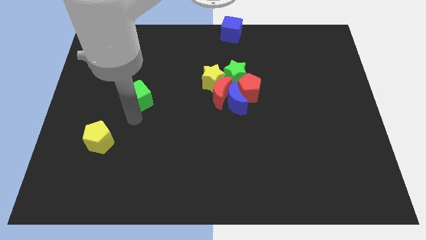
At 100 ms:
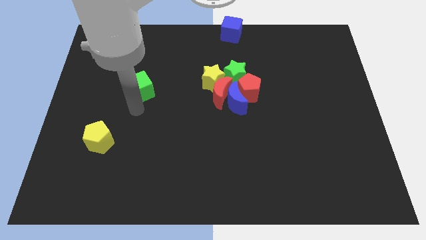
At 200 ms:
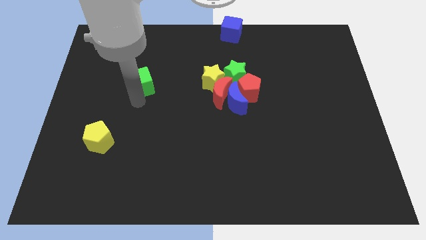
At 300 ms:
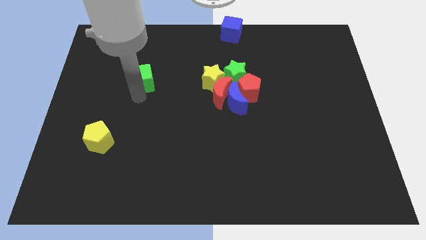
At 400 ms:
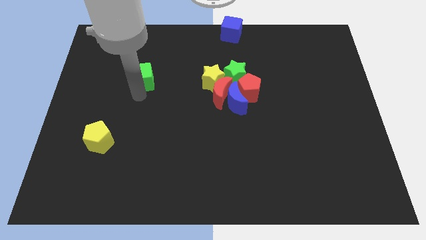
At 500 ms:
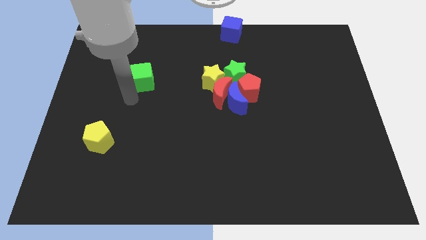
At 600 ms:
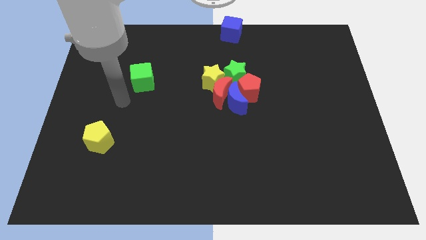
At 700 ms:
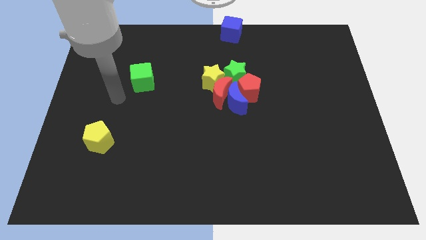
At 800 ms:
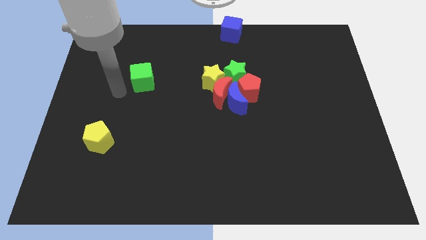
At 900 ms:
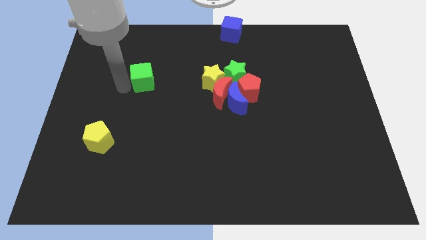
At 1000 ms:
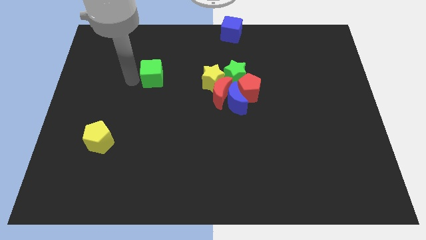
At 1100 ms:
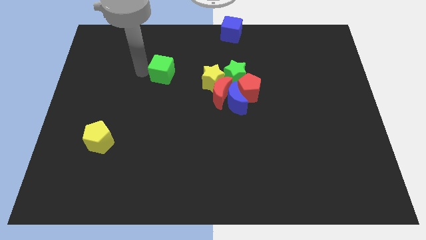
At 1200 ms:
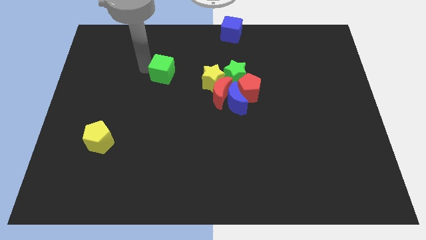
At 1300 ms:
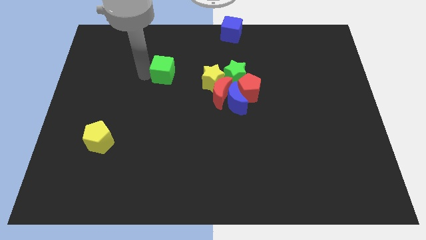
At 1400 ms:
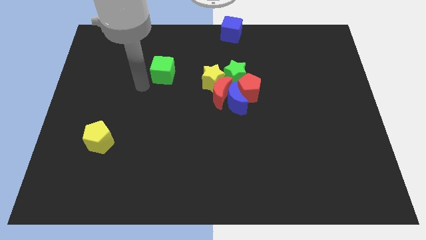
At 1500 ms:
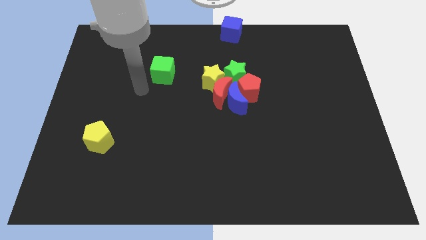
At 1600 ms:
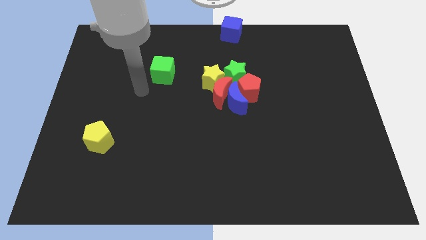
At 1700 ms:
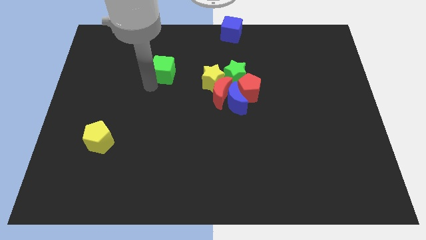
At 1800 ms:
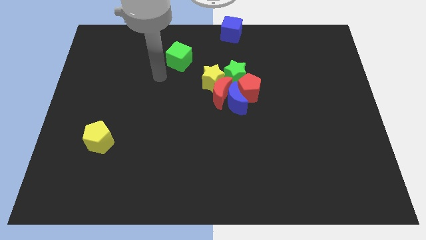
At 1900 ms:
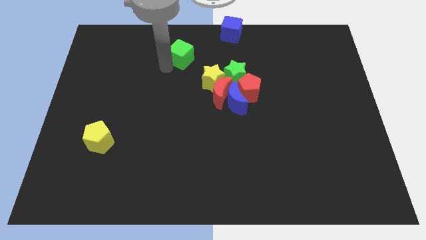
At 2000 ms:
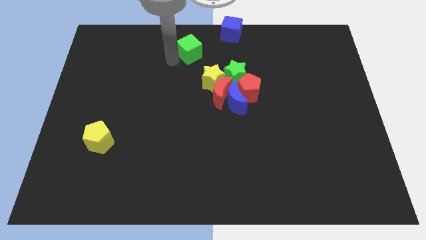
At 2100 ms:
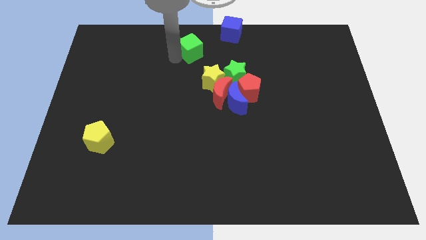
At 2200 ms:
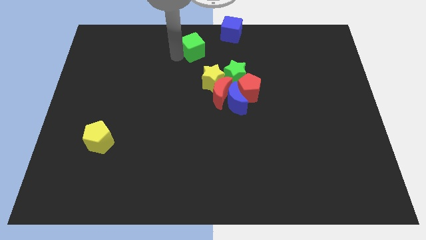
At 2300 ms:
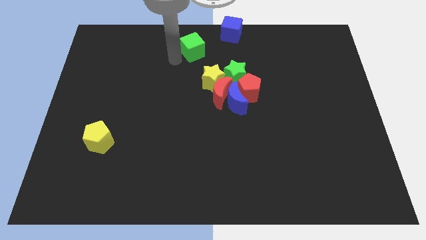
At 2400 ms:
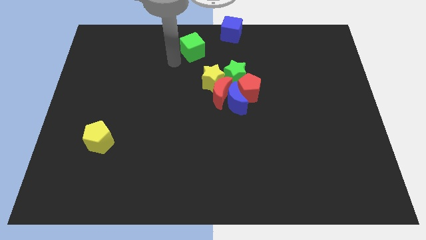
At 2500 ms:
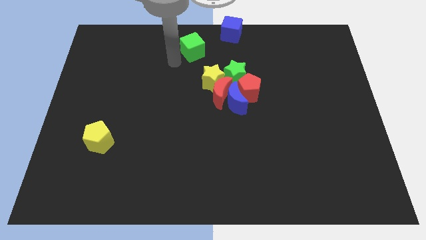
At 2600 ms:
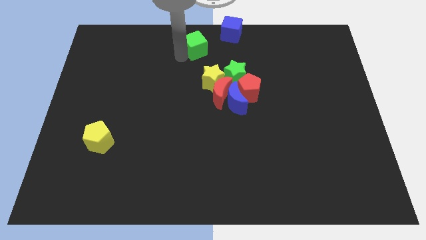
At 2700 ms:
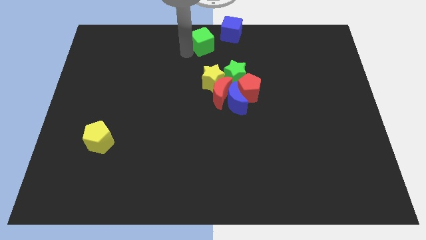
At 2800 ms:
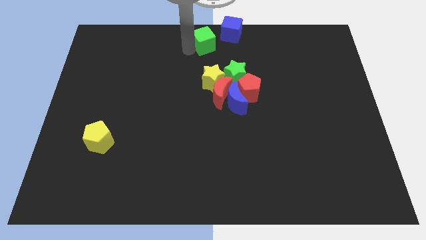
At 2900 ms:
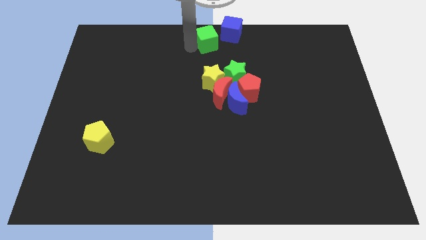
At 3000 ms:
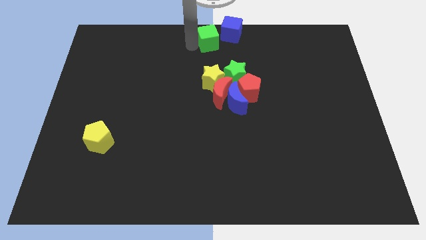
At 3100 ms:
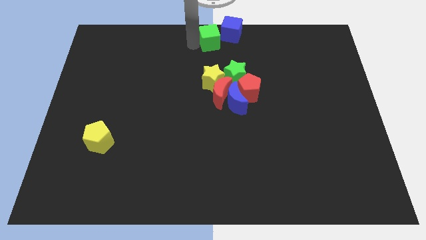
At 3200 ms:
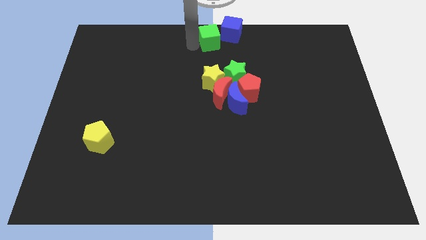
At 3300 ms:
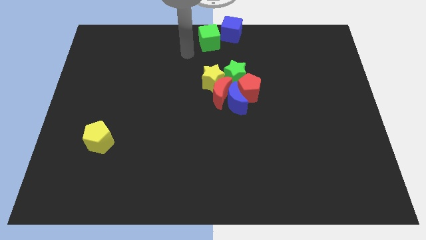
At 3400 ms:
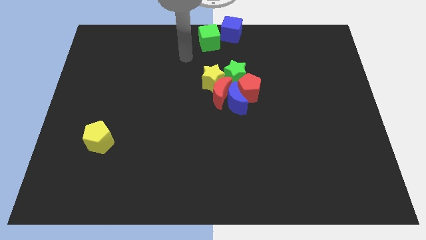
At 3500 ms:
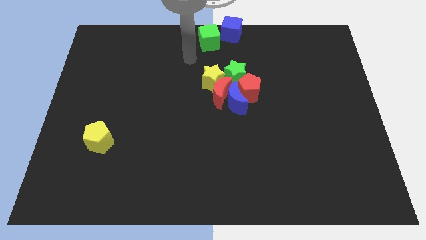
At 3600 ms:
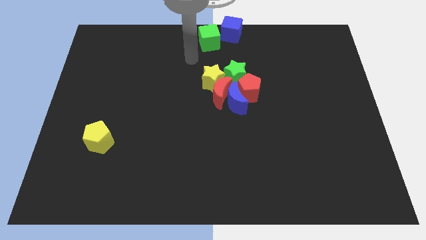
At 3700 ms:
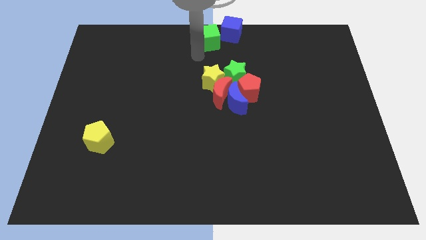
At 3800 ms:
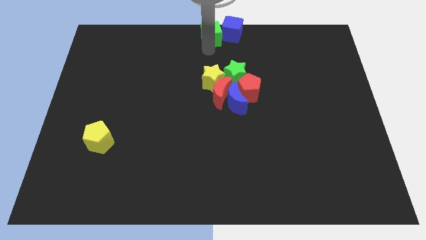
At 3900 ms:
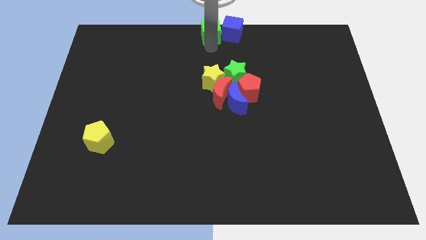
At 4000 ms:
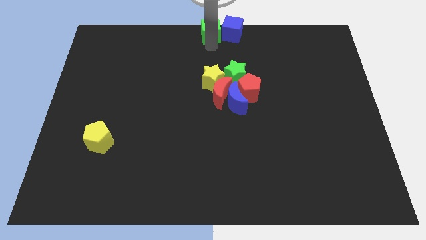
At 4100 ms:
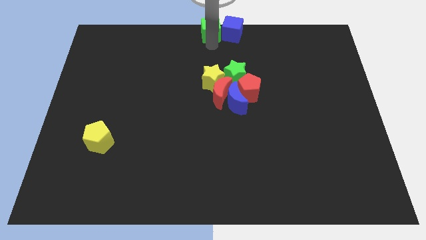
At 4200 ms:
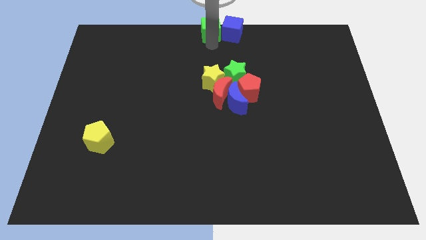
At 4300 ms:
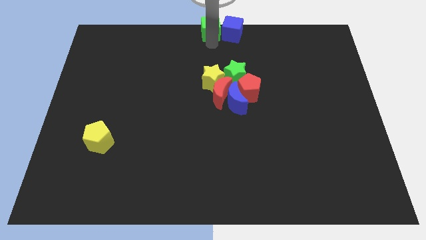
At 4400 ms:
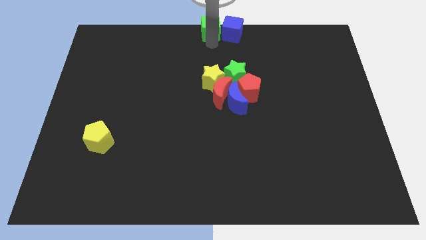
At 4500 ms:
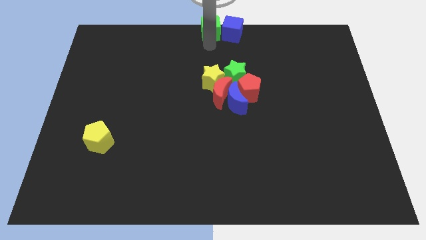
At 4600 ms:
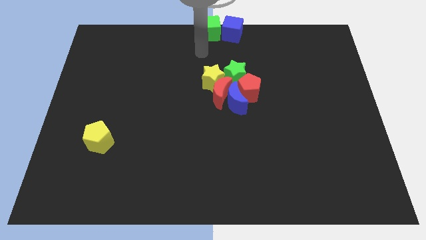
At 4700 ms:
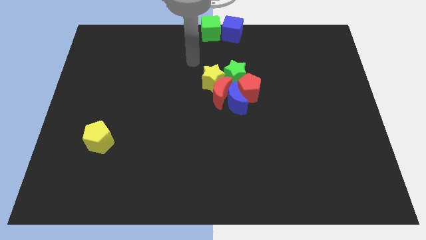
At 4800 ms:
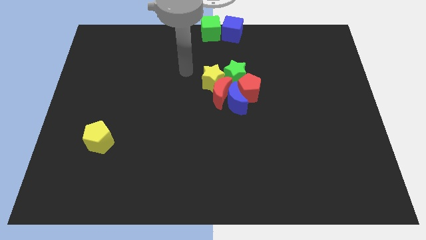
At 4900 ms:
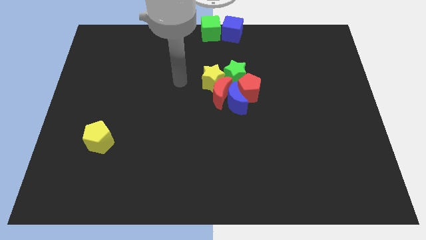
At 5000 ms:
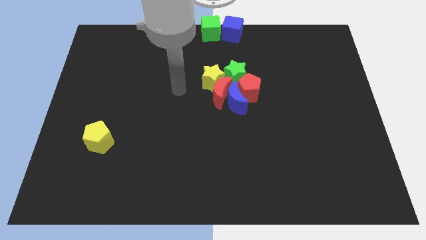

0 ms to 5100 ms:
move the green cube to the left of the blue cube

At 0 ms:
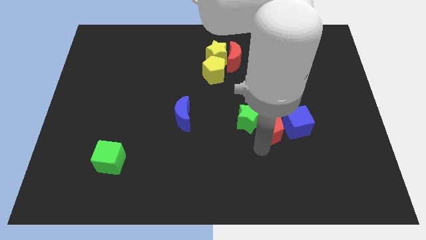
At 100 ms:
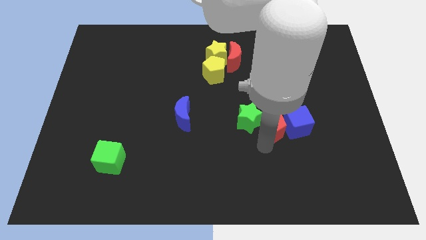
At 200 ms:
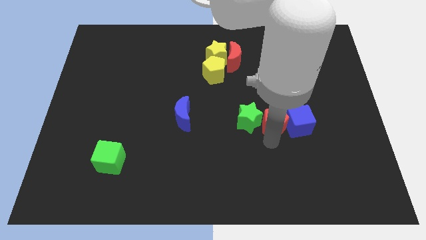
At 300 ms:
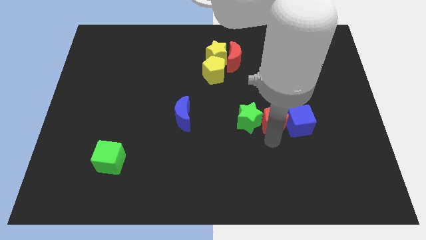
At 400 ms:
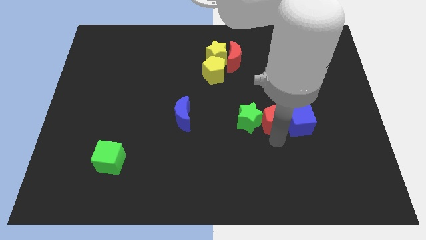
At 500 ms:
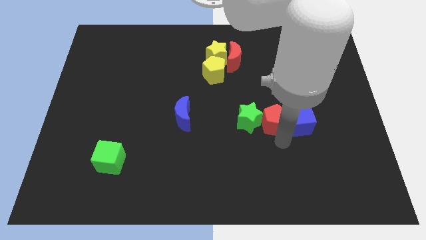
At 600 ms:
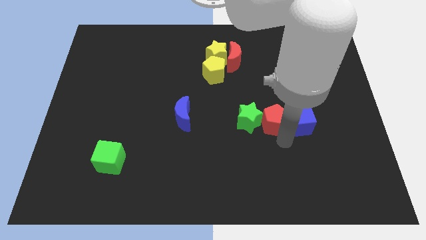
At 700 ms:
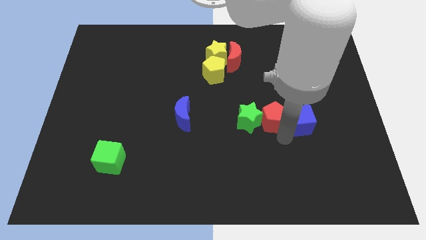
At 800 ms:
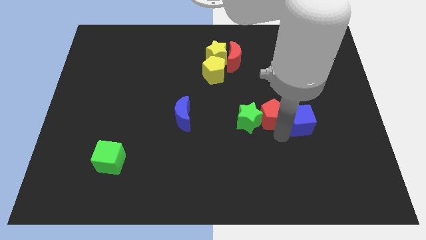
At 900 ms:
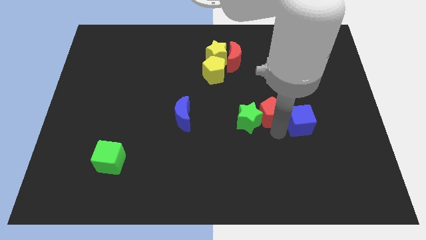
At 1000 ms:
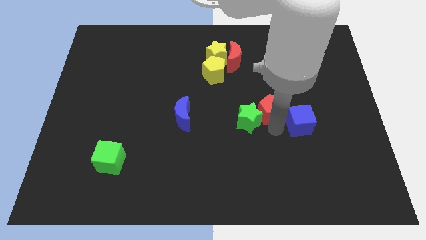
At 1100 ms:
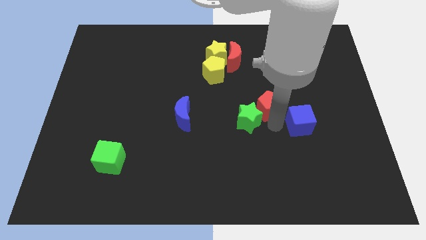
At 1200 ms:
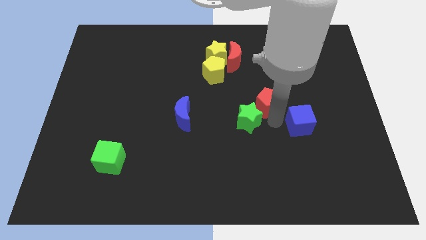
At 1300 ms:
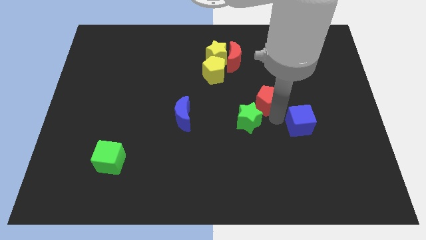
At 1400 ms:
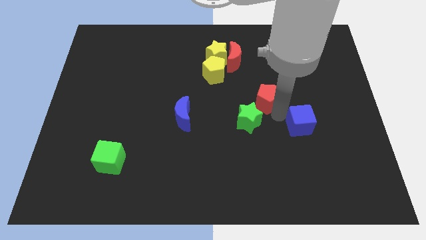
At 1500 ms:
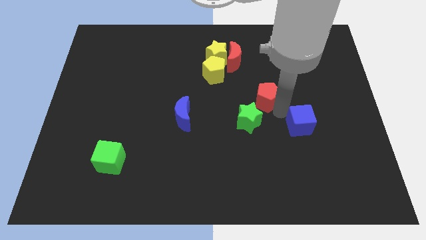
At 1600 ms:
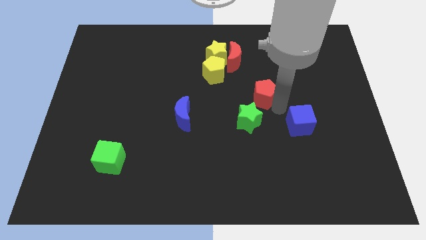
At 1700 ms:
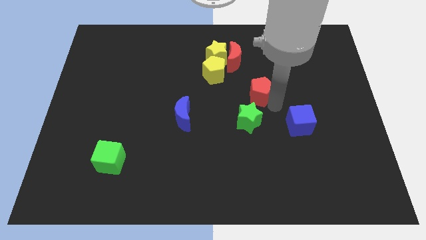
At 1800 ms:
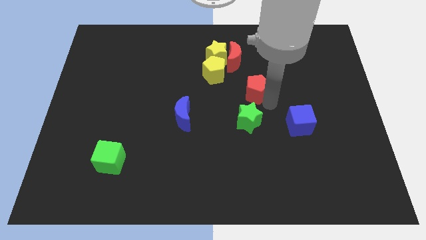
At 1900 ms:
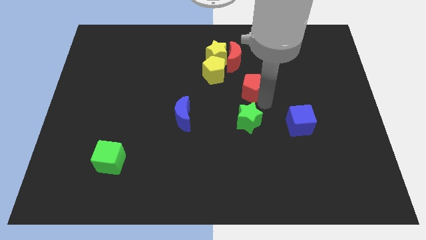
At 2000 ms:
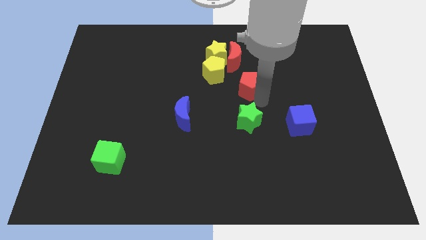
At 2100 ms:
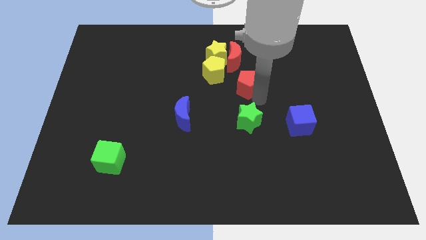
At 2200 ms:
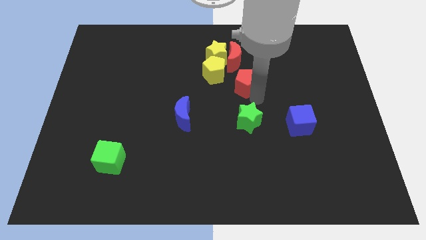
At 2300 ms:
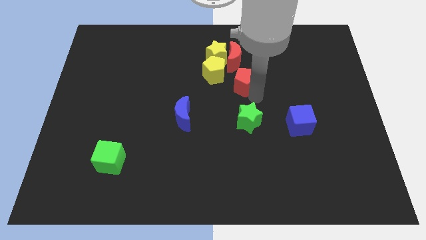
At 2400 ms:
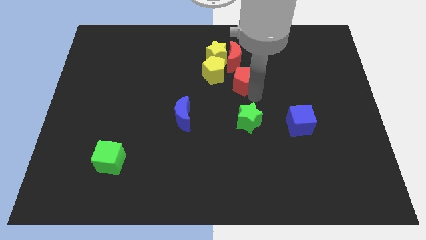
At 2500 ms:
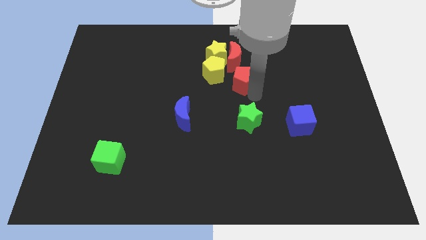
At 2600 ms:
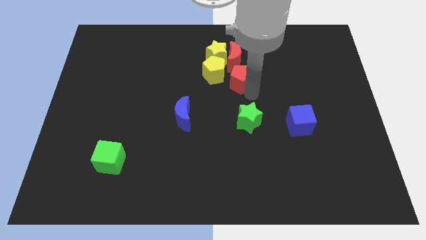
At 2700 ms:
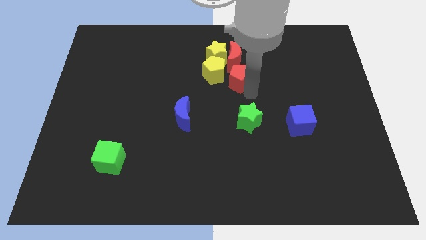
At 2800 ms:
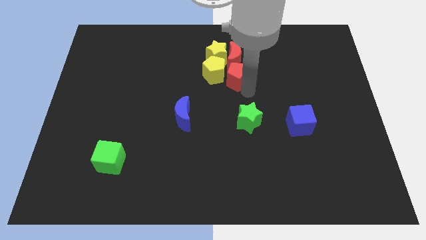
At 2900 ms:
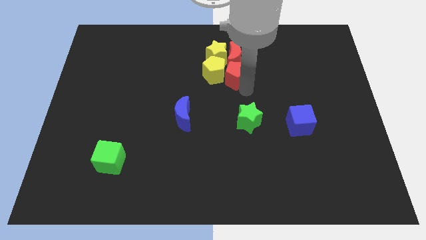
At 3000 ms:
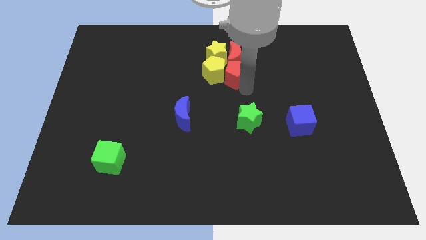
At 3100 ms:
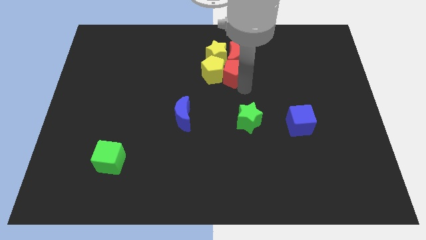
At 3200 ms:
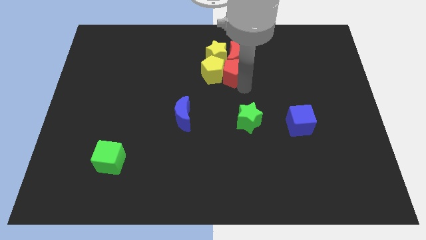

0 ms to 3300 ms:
move the red pentagon towards the yellow blocks and red crescent

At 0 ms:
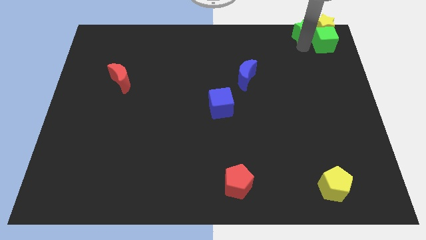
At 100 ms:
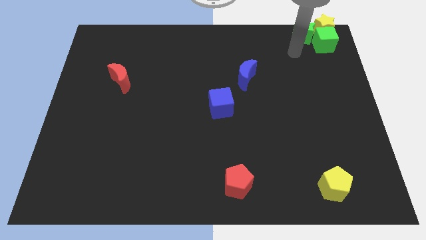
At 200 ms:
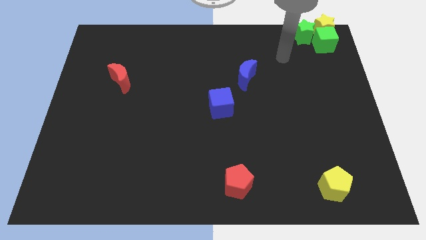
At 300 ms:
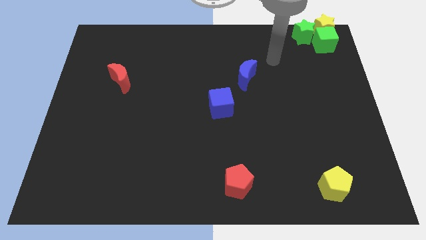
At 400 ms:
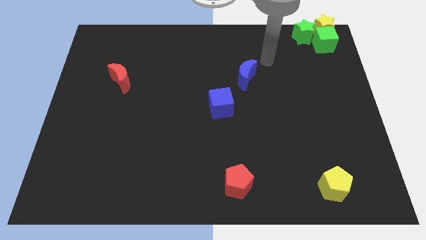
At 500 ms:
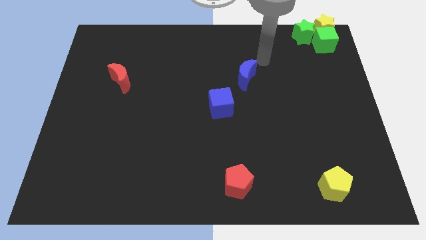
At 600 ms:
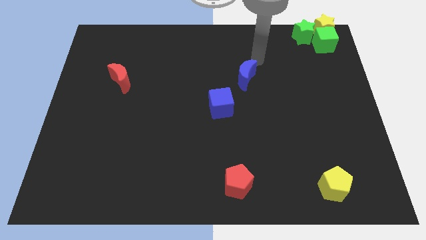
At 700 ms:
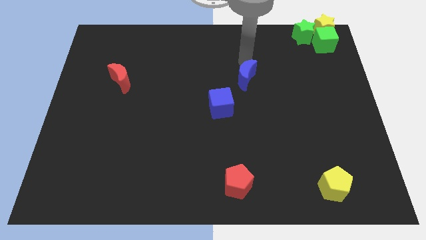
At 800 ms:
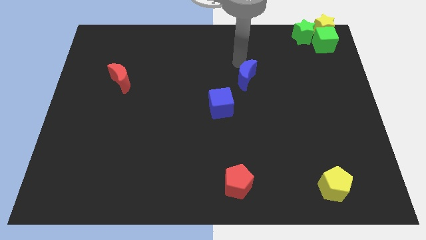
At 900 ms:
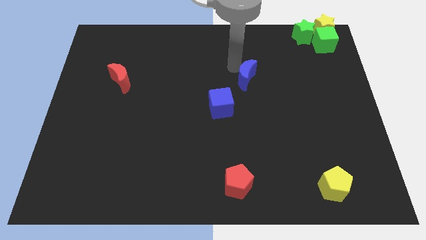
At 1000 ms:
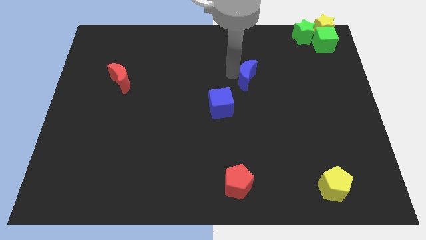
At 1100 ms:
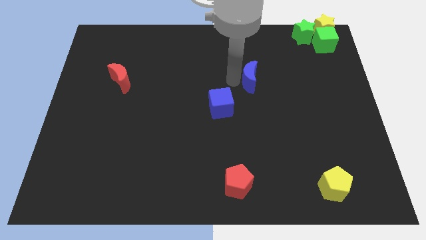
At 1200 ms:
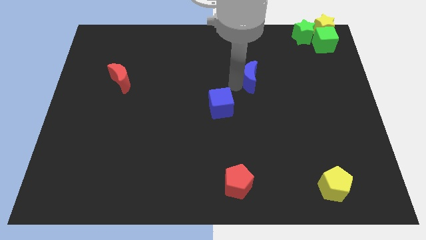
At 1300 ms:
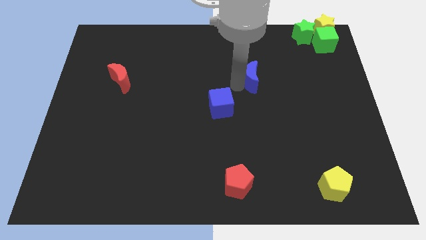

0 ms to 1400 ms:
move your arm to the left of blue moon
